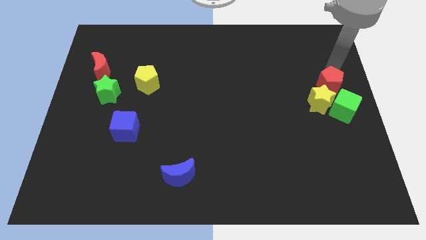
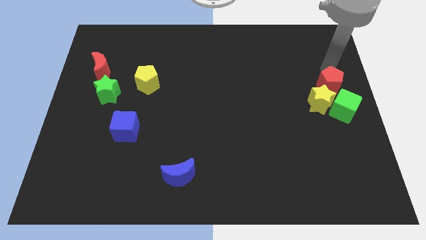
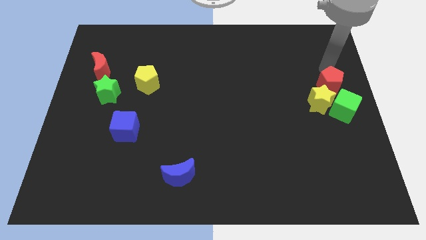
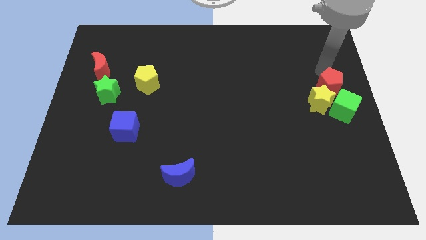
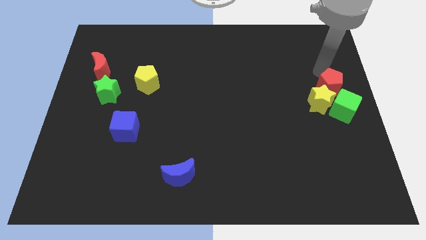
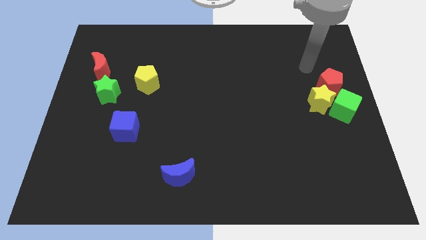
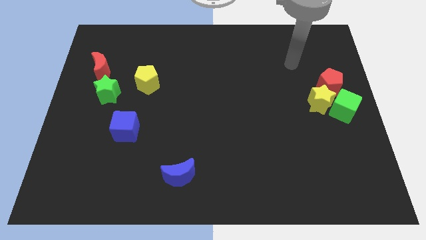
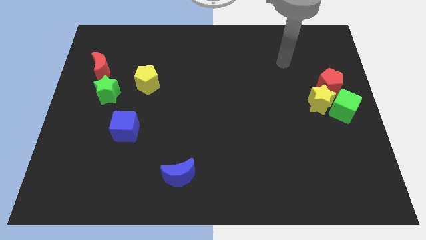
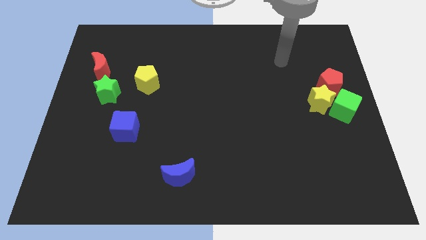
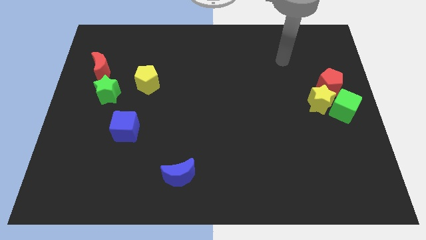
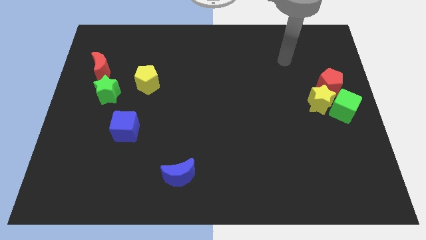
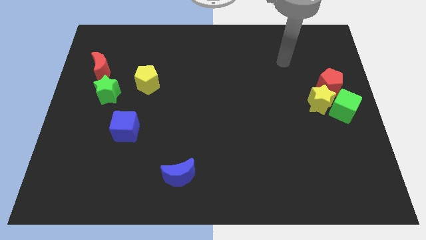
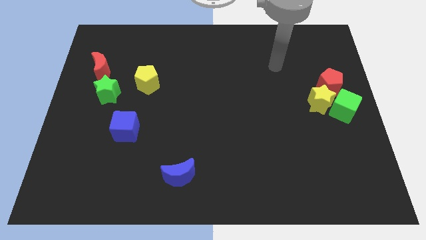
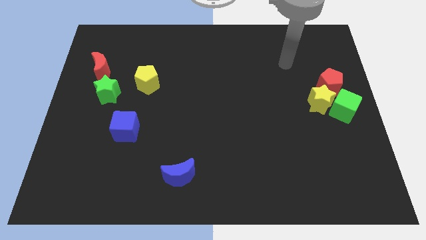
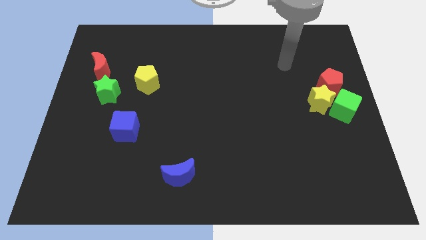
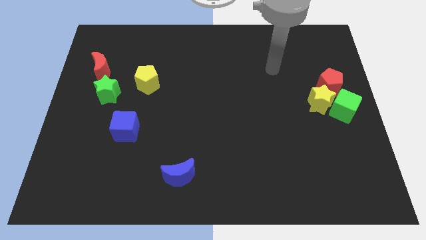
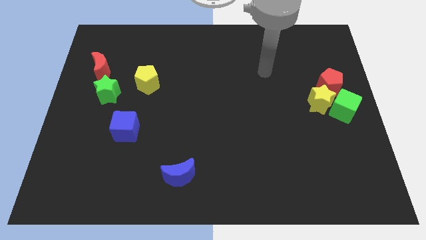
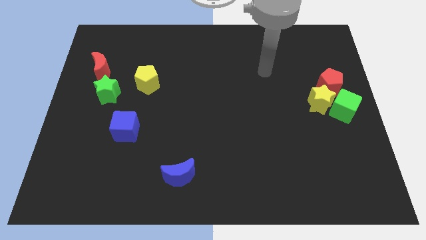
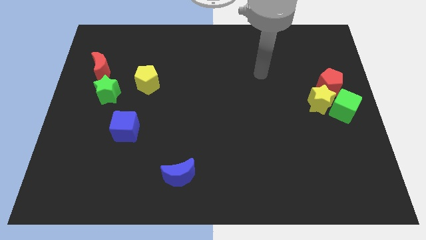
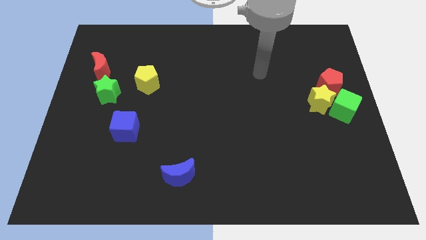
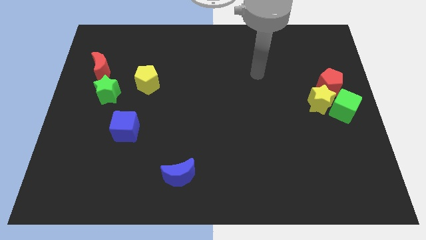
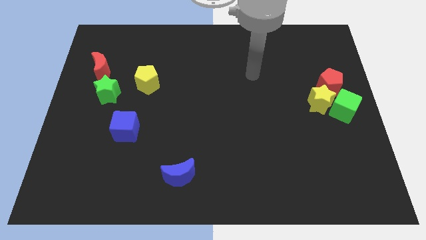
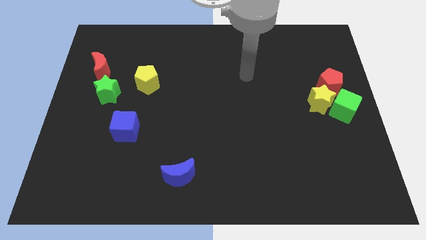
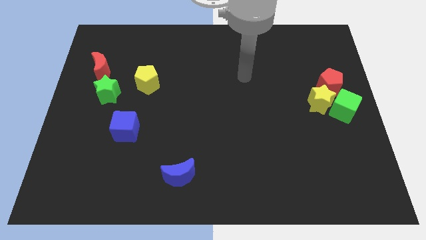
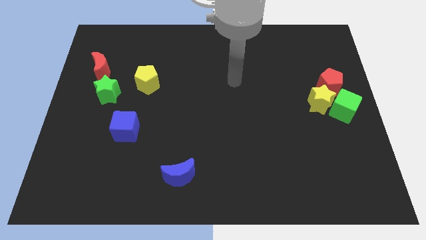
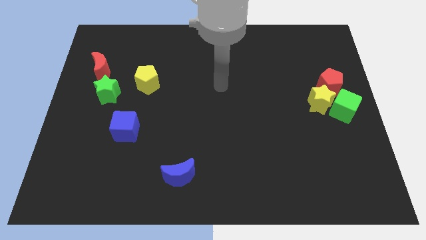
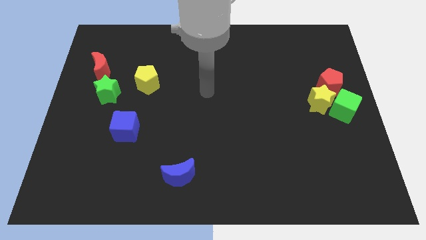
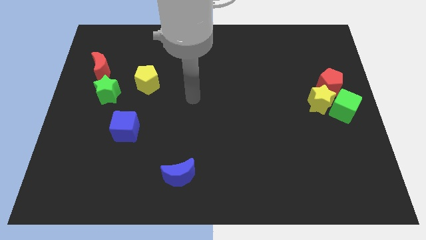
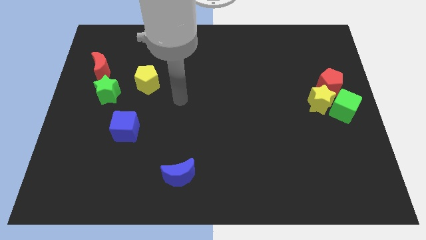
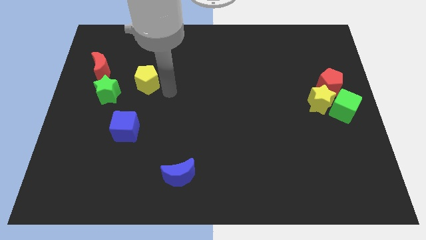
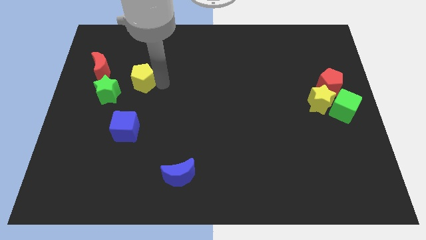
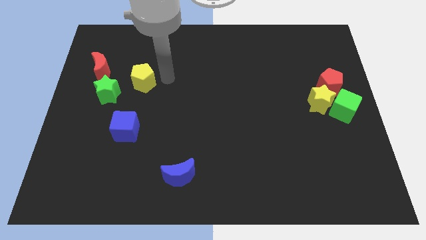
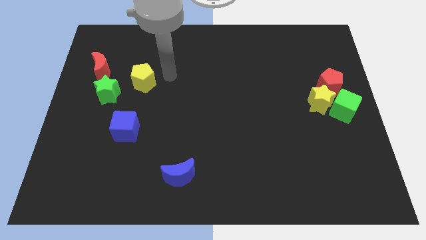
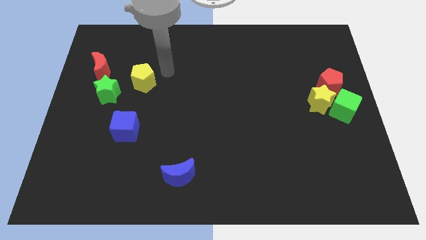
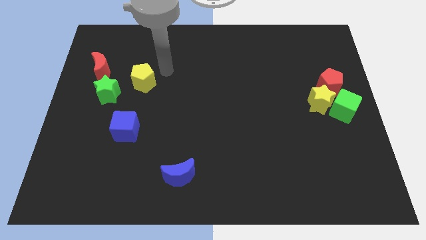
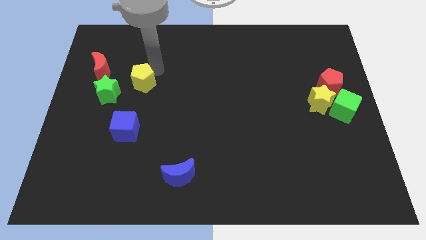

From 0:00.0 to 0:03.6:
place the arm diagonally to the yellow pentagon

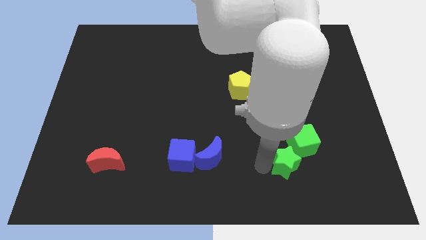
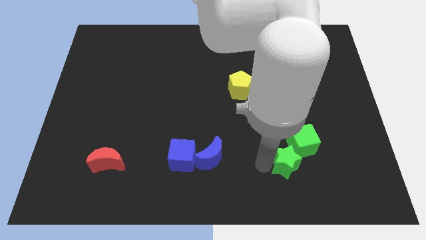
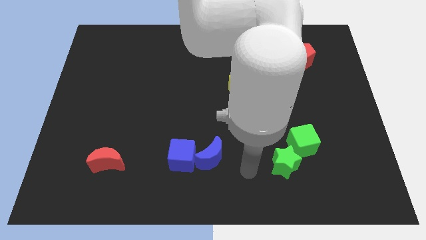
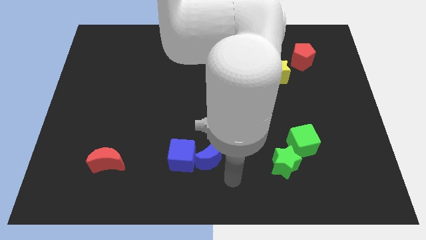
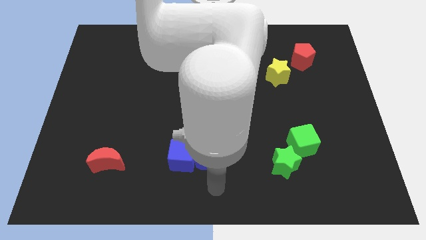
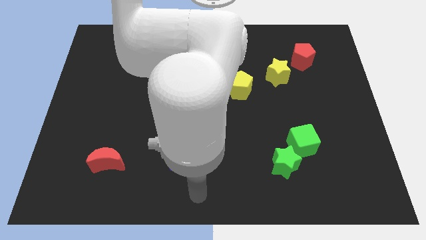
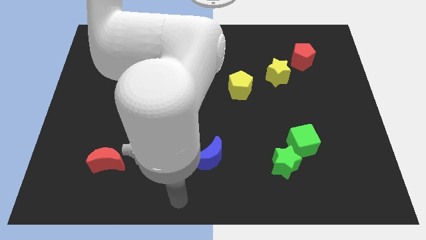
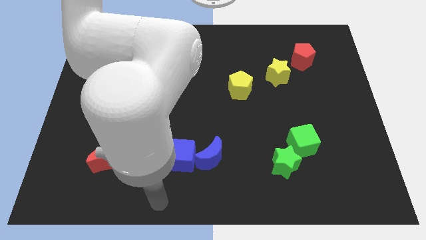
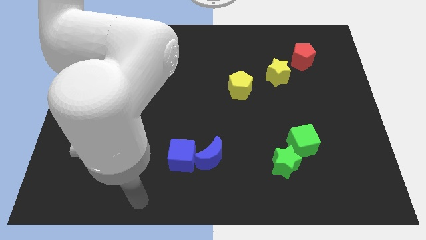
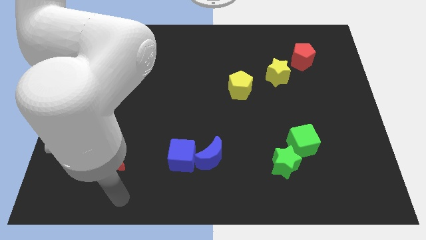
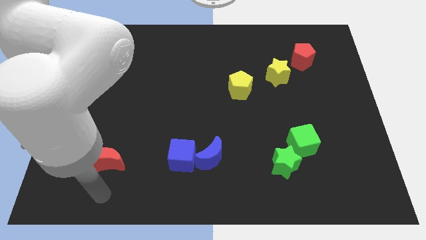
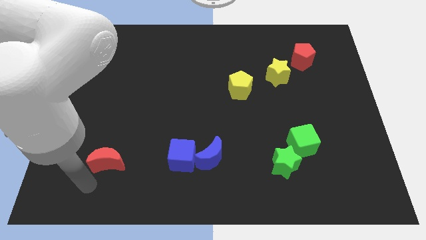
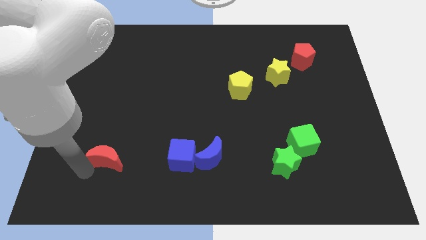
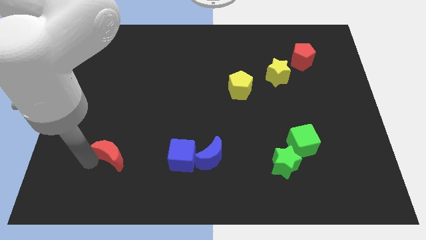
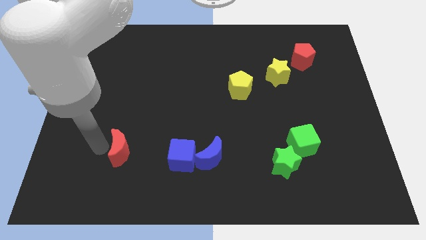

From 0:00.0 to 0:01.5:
move the red crescent slightly up

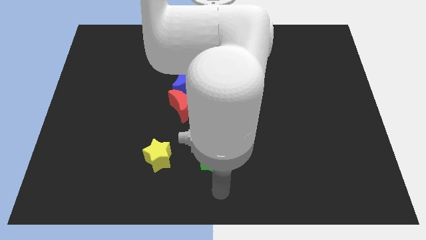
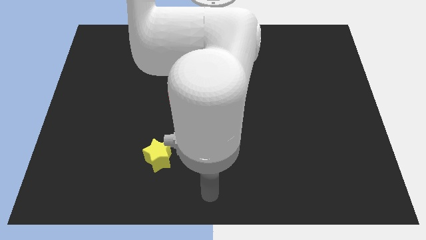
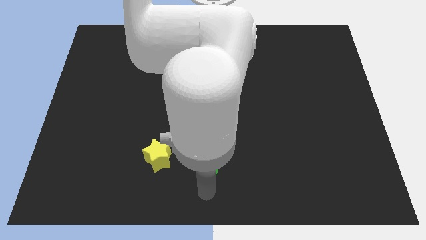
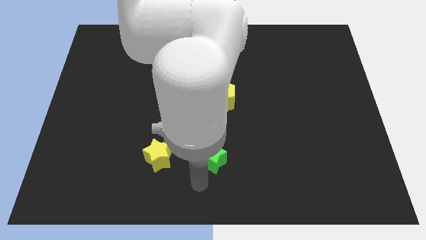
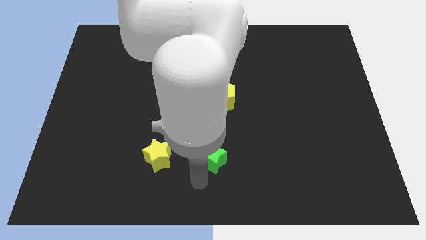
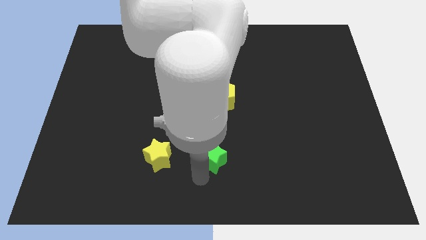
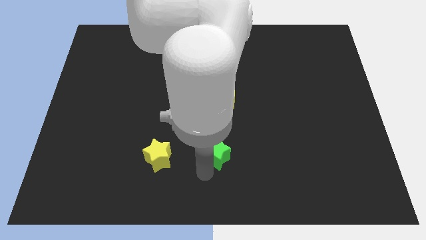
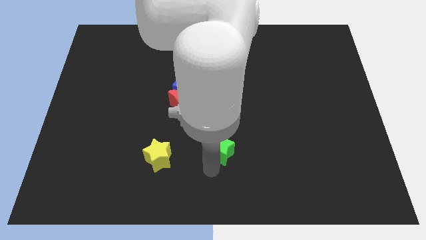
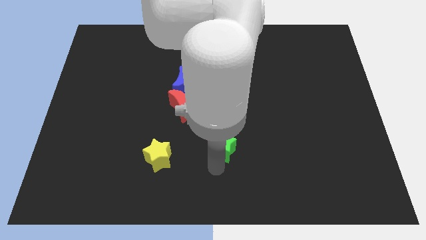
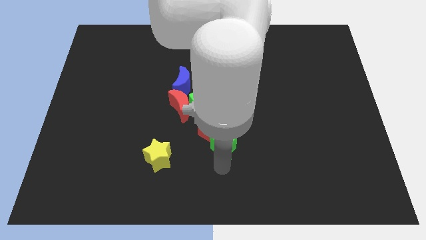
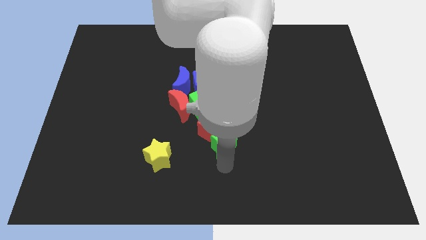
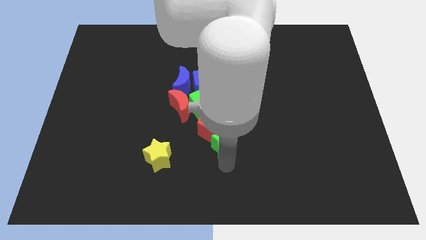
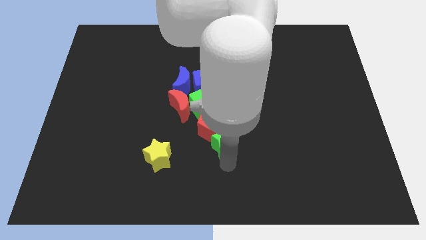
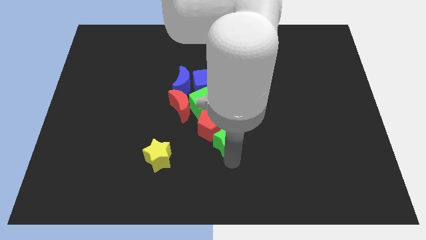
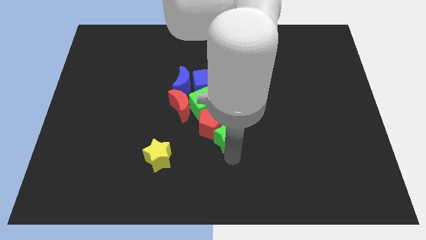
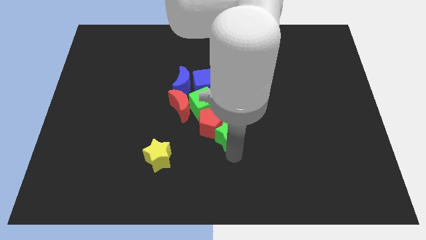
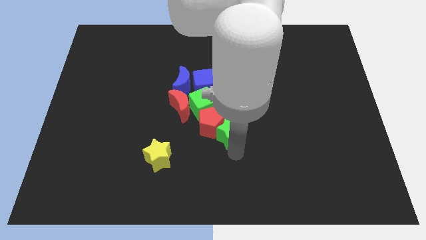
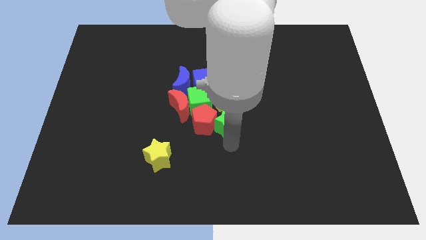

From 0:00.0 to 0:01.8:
push the green star parallel right to the red pentagon

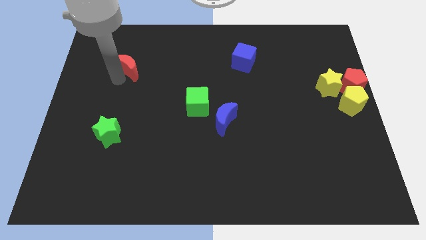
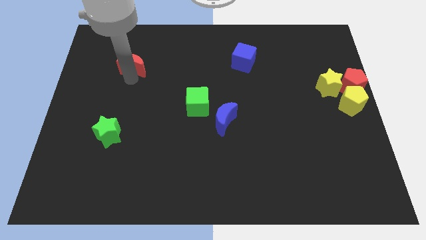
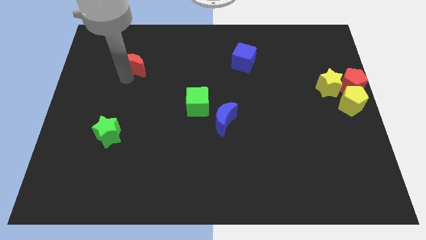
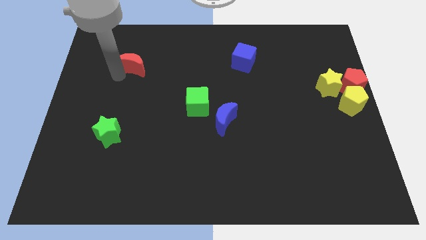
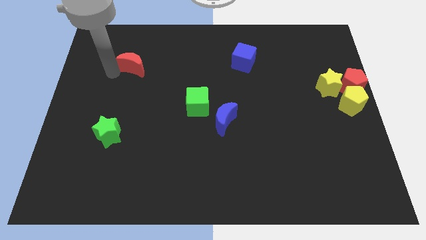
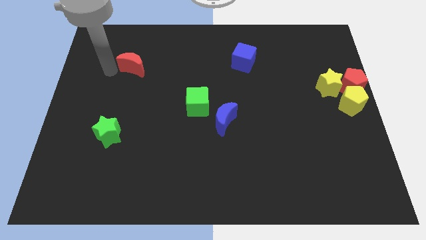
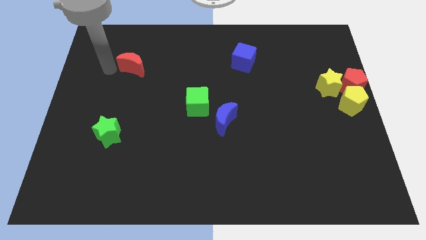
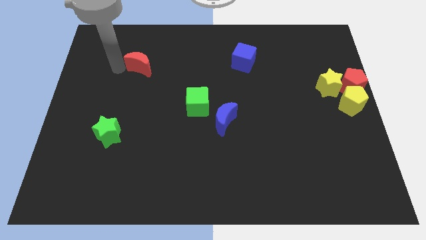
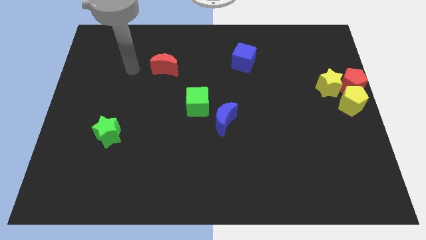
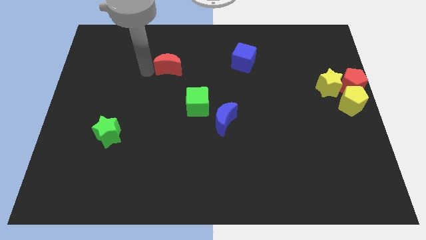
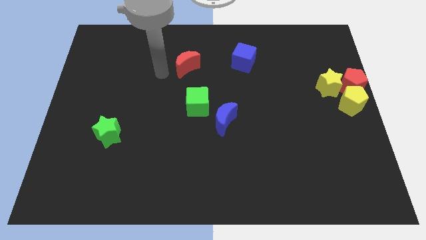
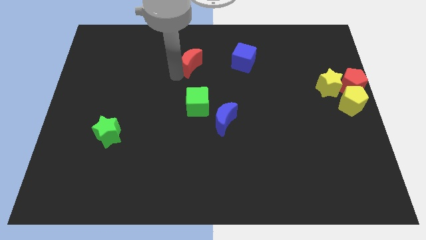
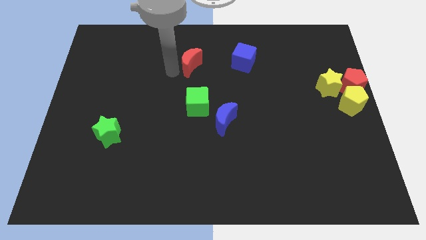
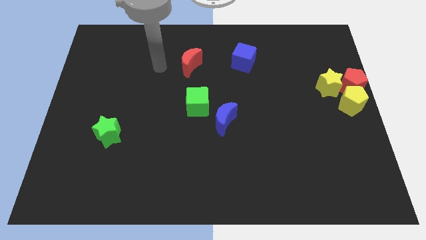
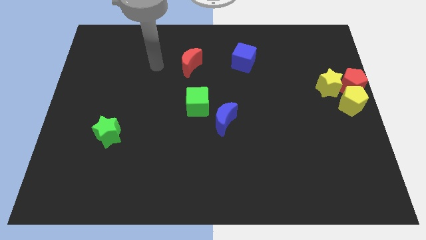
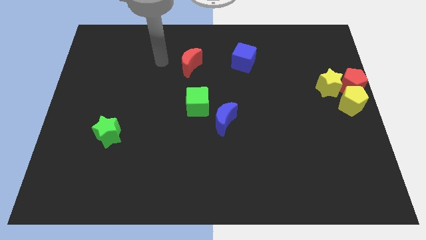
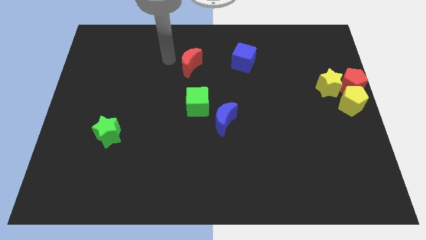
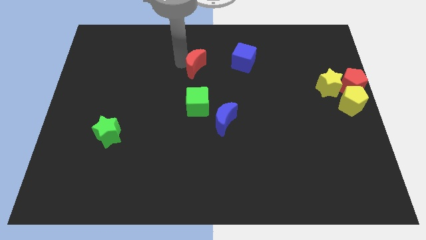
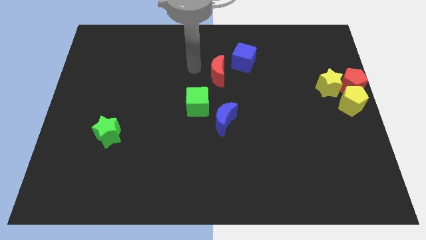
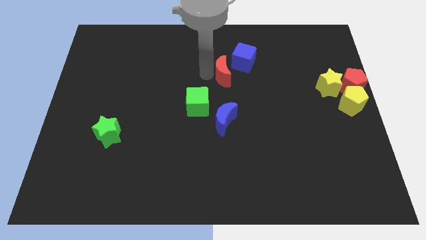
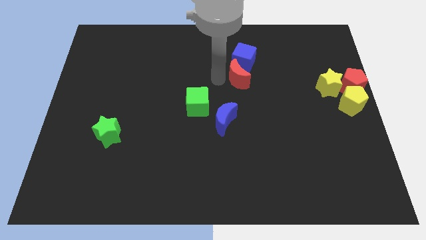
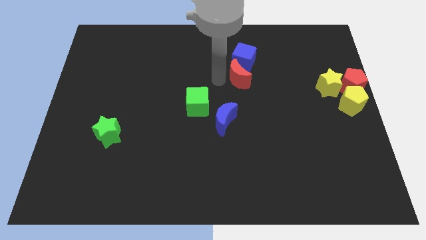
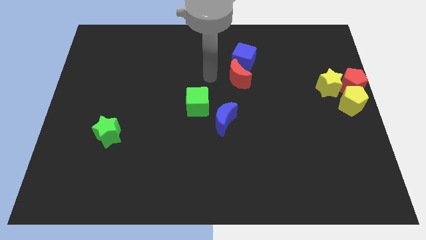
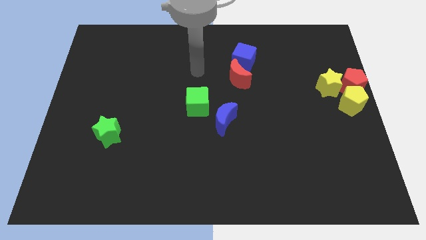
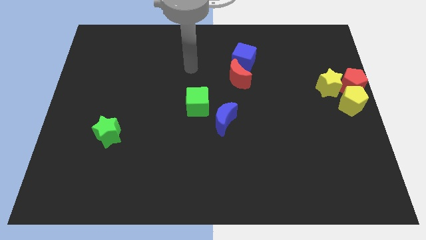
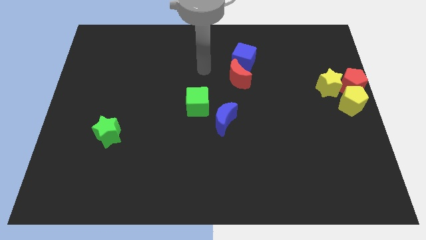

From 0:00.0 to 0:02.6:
push red crescent below blue cube
